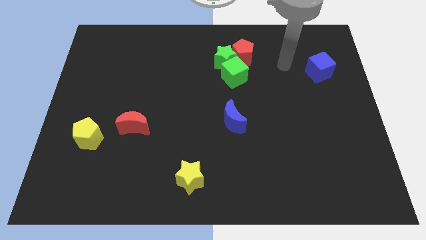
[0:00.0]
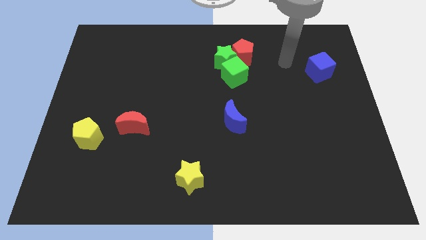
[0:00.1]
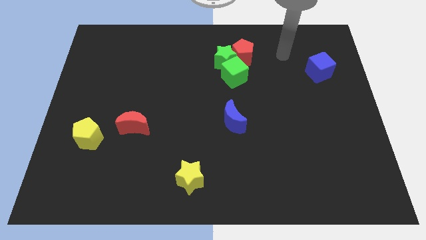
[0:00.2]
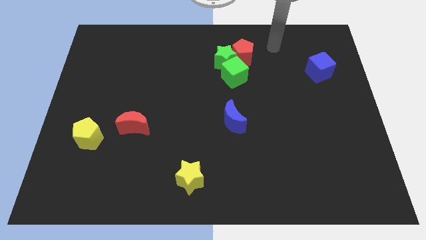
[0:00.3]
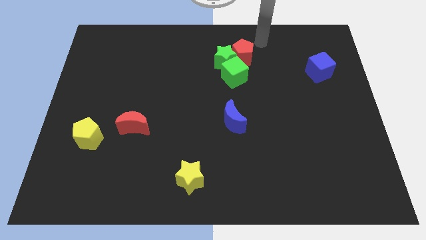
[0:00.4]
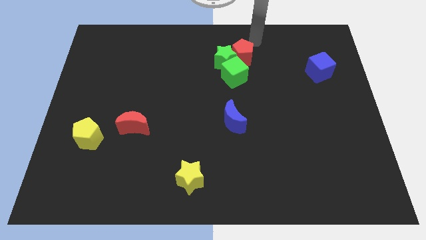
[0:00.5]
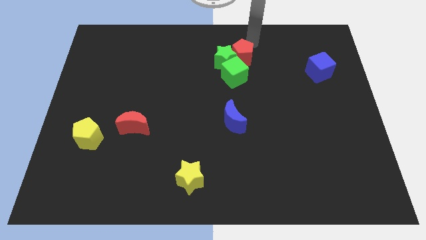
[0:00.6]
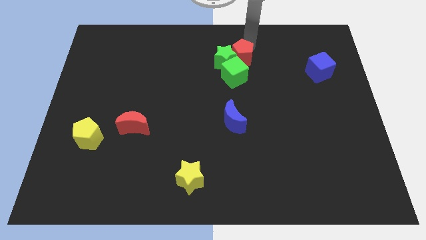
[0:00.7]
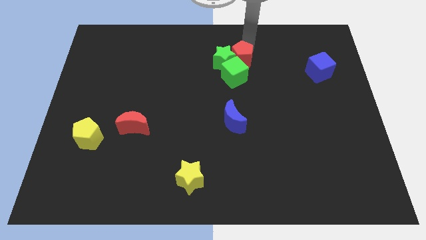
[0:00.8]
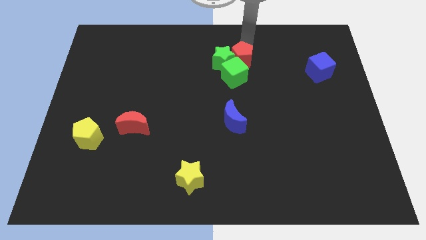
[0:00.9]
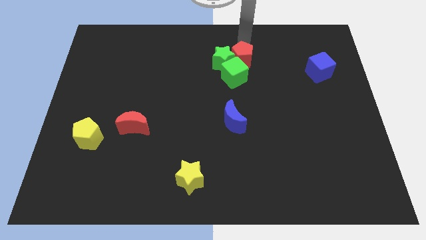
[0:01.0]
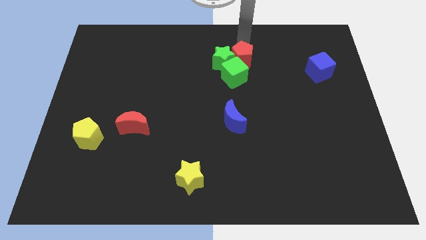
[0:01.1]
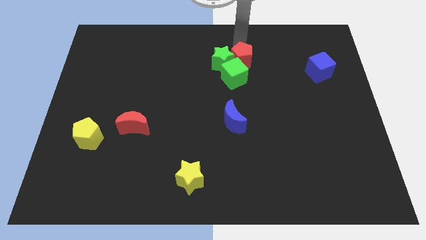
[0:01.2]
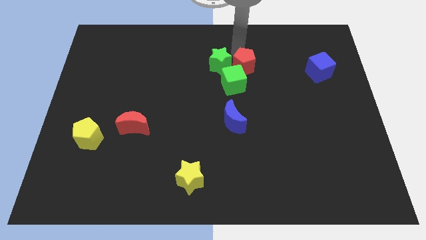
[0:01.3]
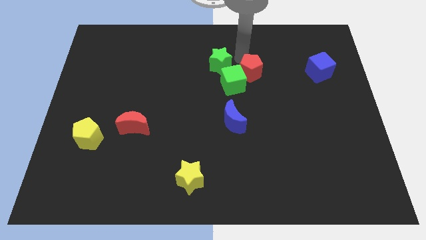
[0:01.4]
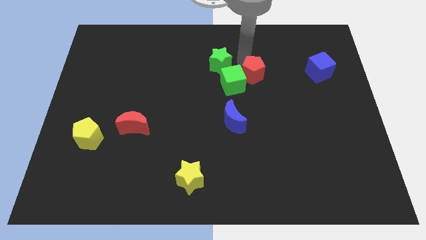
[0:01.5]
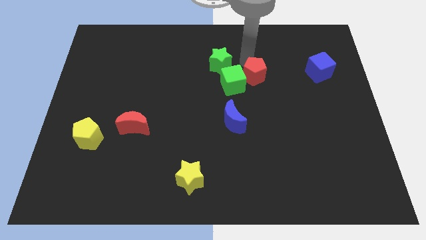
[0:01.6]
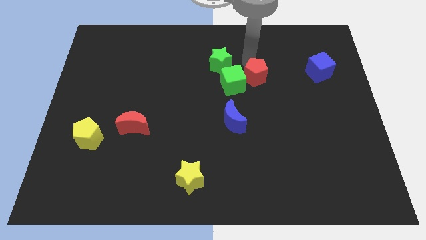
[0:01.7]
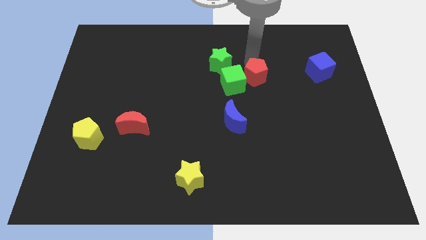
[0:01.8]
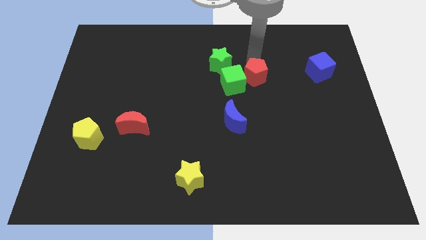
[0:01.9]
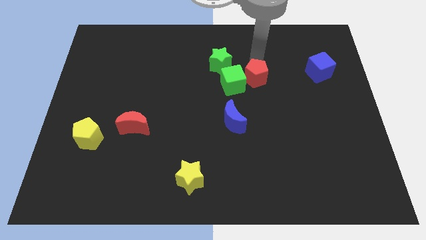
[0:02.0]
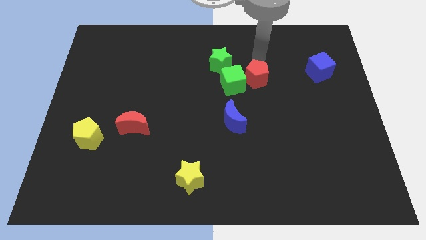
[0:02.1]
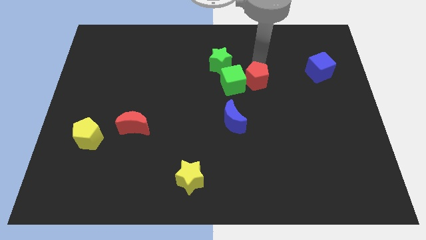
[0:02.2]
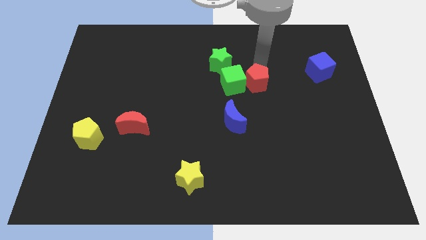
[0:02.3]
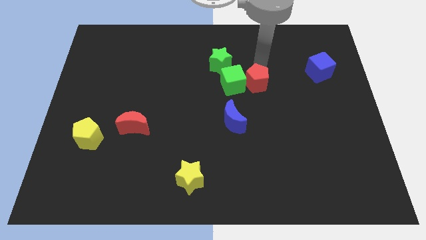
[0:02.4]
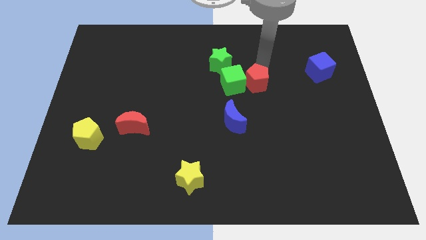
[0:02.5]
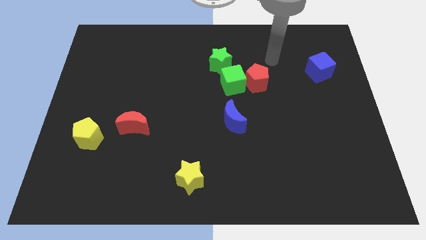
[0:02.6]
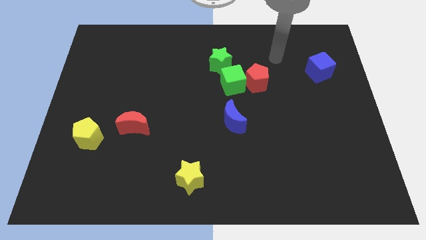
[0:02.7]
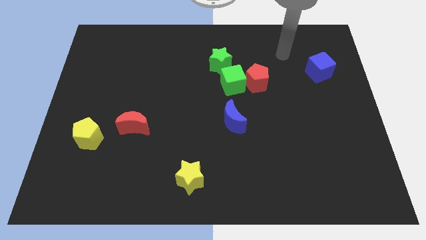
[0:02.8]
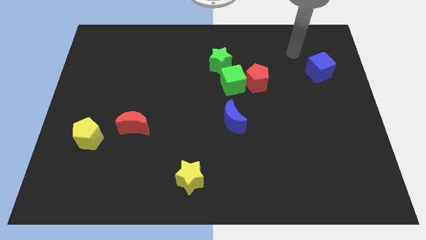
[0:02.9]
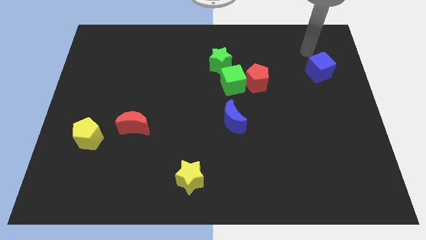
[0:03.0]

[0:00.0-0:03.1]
slide red pentagon to the right of green cube

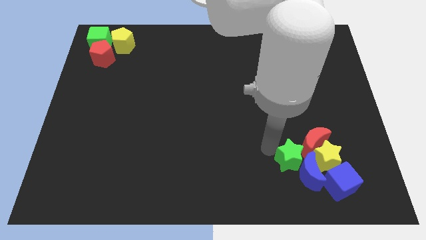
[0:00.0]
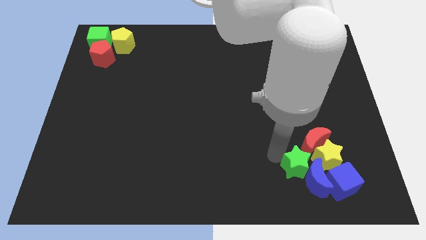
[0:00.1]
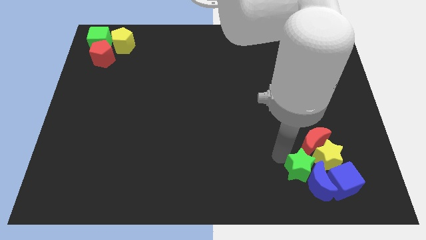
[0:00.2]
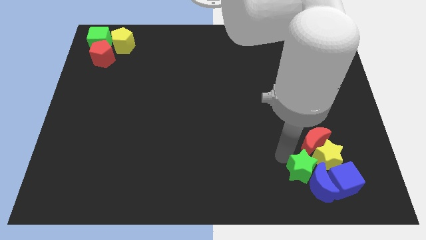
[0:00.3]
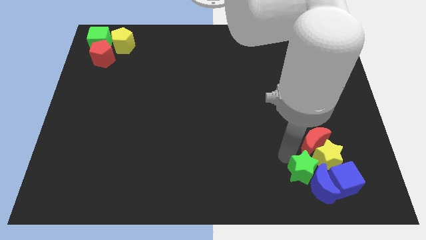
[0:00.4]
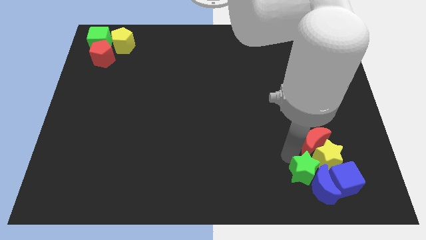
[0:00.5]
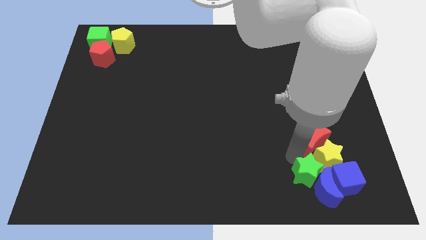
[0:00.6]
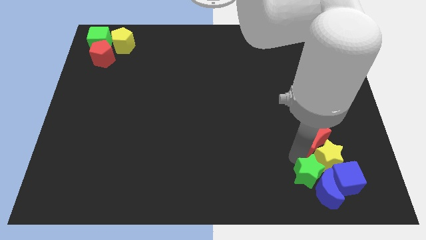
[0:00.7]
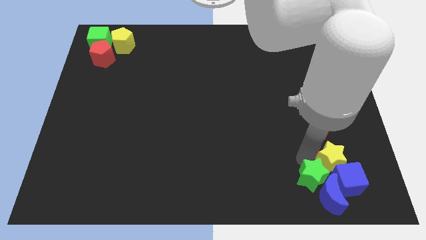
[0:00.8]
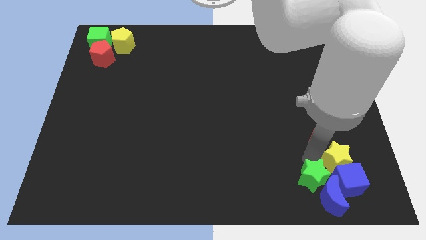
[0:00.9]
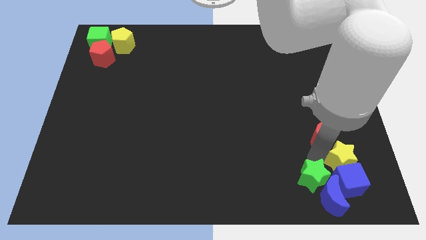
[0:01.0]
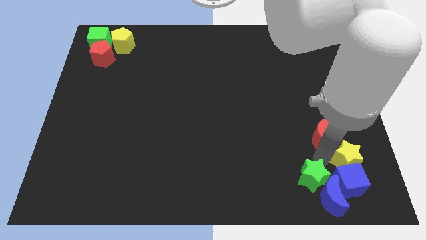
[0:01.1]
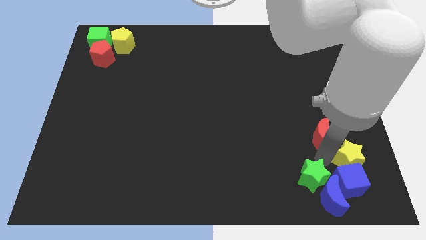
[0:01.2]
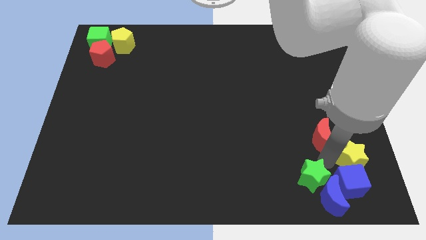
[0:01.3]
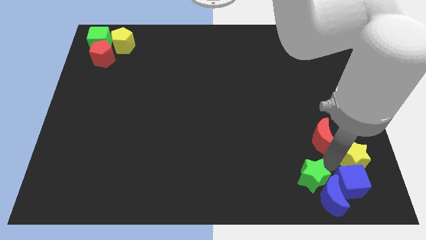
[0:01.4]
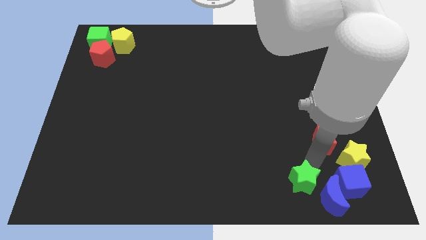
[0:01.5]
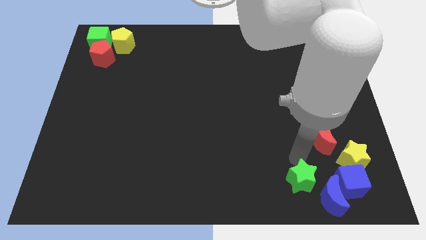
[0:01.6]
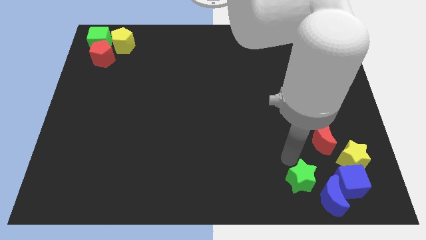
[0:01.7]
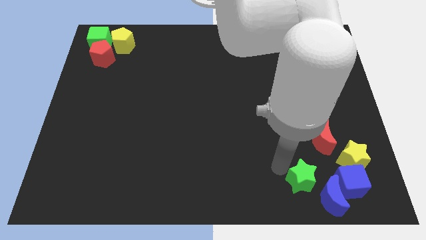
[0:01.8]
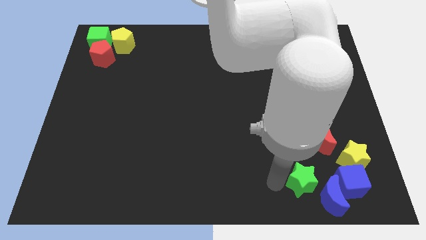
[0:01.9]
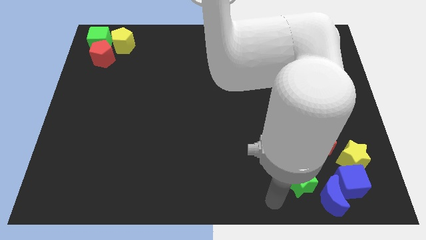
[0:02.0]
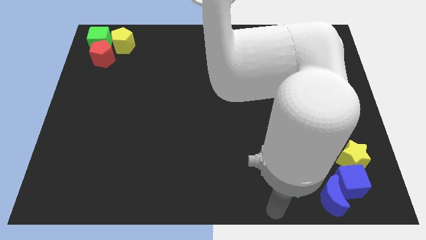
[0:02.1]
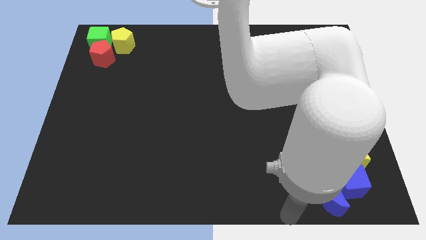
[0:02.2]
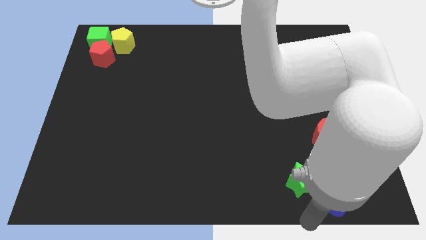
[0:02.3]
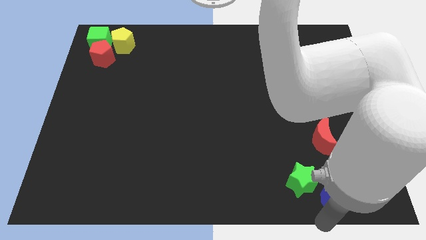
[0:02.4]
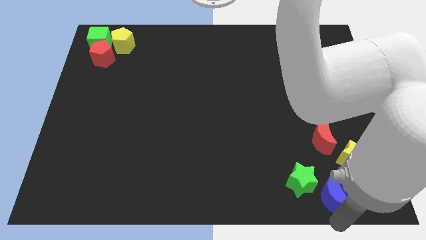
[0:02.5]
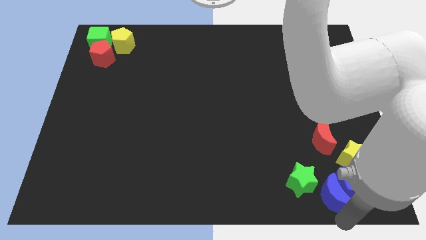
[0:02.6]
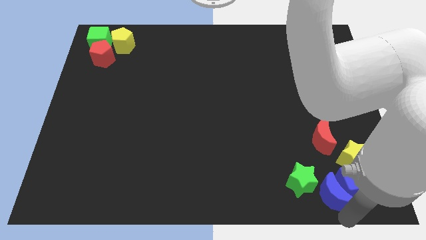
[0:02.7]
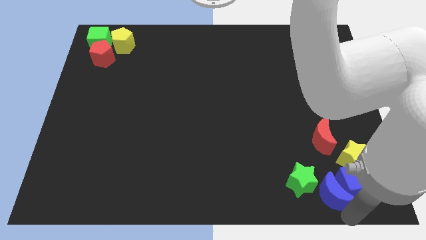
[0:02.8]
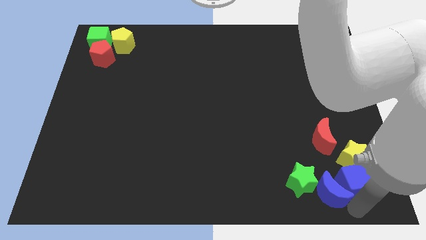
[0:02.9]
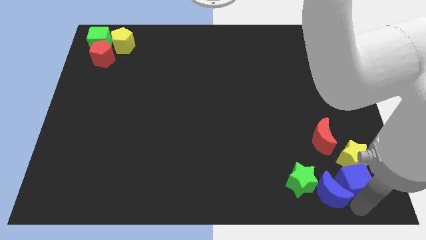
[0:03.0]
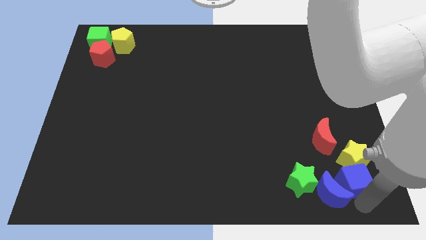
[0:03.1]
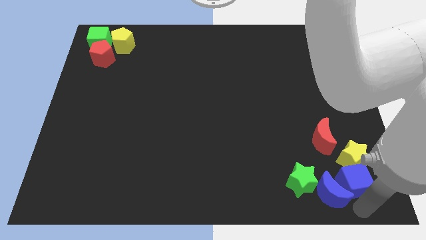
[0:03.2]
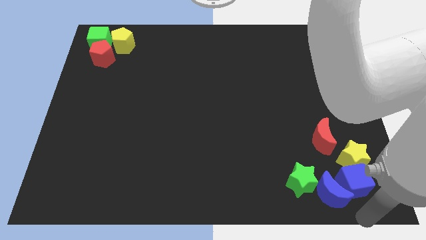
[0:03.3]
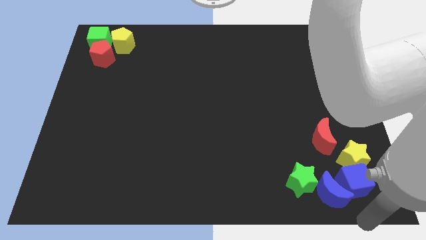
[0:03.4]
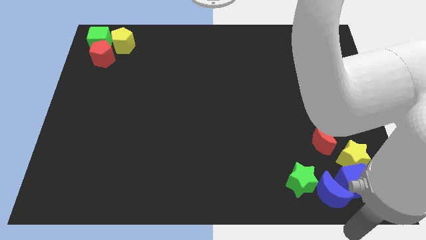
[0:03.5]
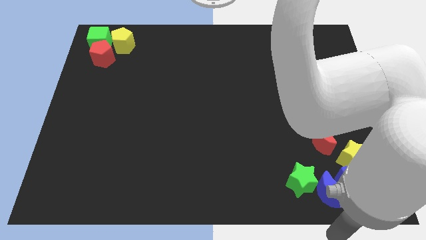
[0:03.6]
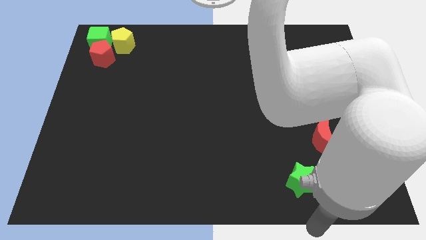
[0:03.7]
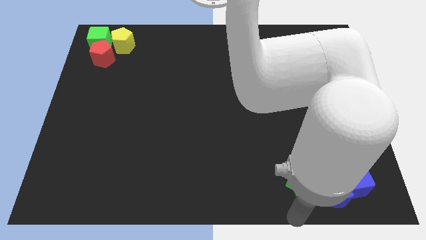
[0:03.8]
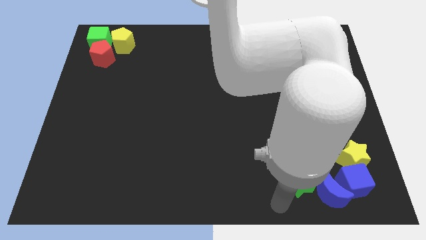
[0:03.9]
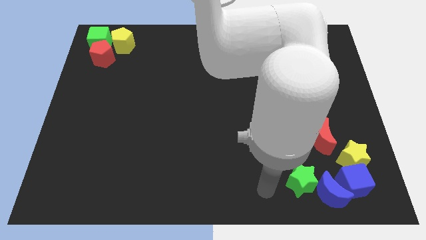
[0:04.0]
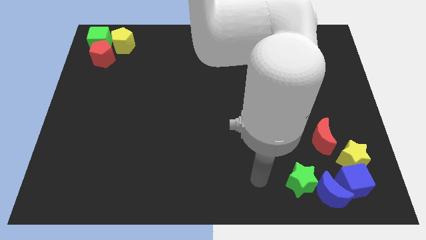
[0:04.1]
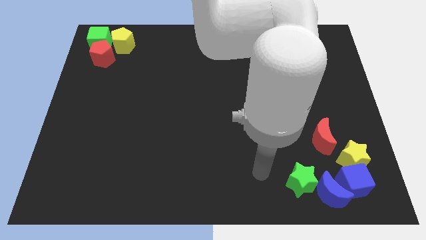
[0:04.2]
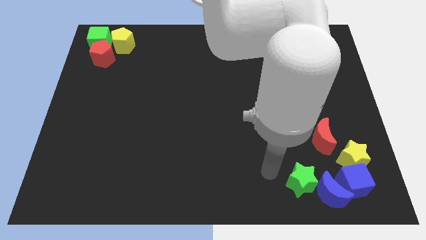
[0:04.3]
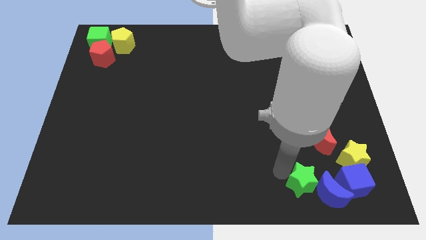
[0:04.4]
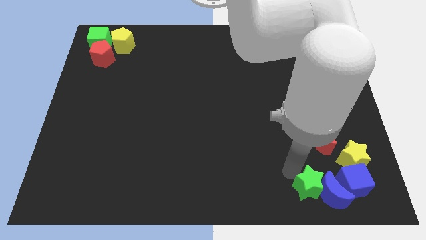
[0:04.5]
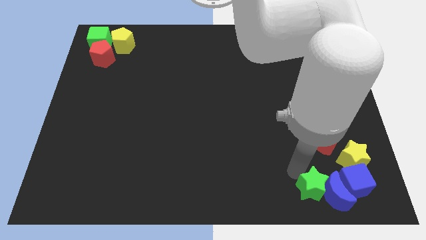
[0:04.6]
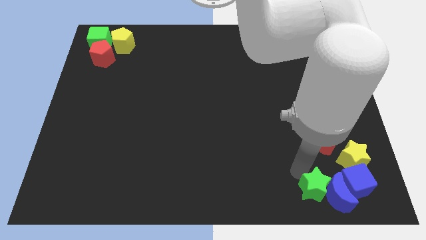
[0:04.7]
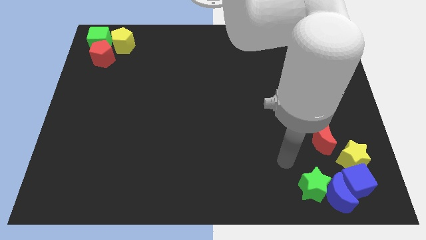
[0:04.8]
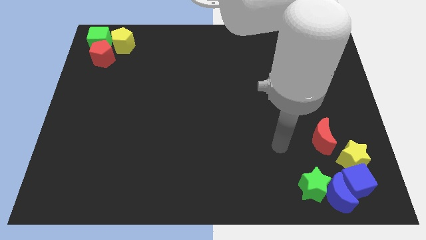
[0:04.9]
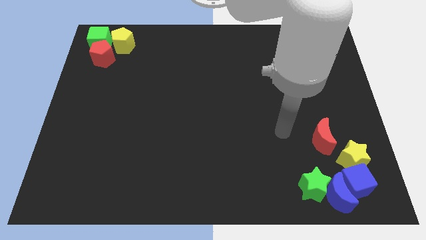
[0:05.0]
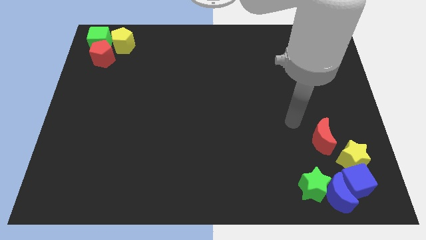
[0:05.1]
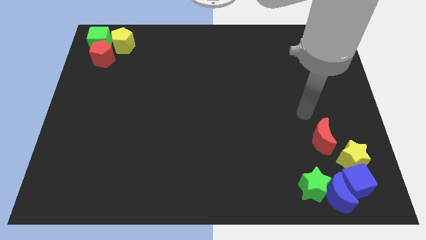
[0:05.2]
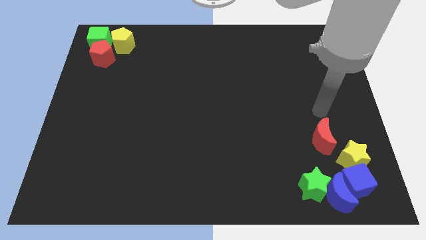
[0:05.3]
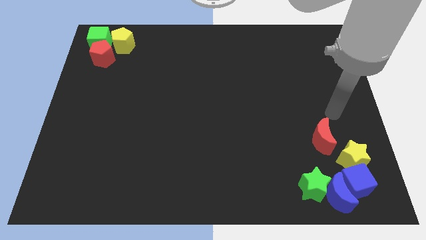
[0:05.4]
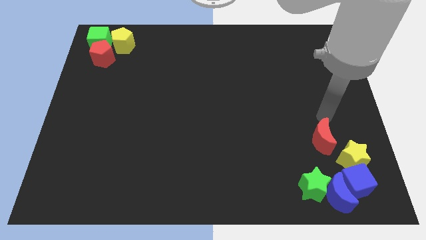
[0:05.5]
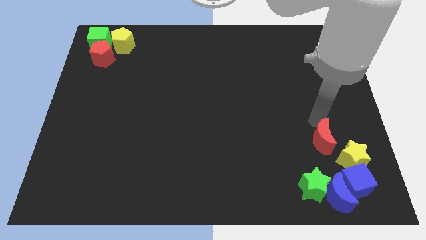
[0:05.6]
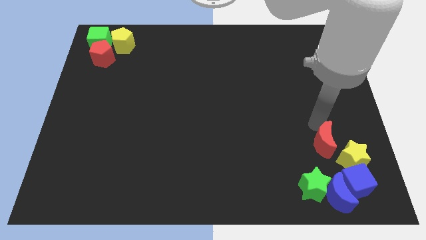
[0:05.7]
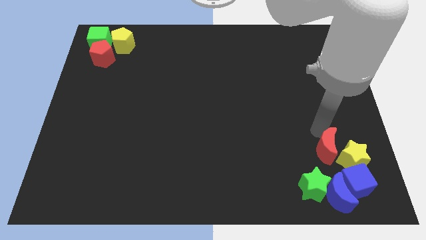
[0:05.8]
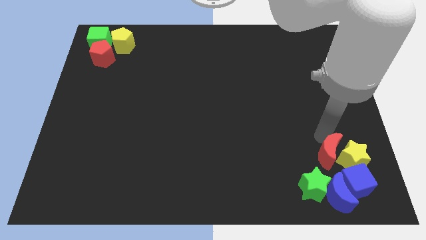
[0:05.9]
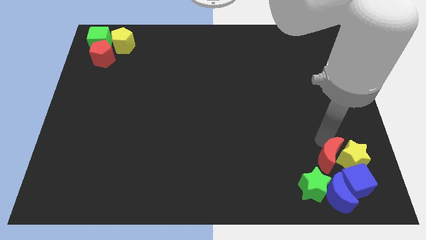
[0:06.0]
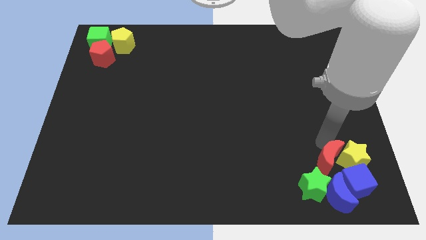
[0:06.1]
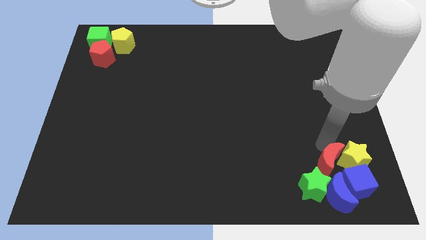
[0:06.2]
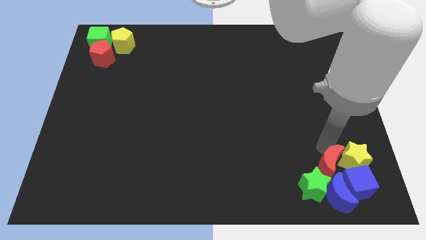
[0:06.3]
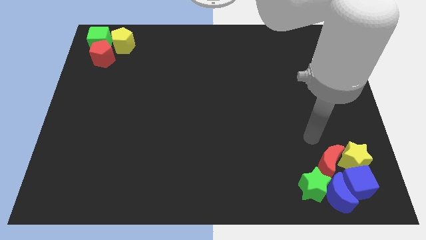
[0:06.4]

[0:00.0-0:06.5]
move the group of the blocks to the right bottom of the board
